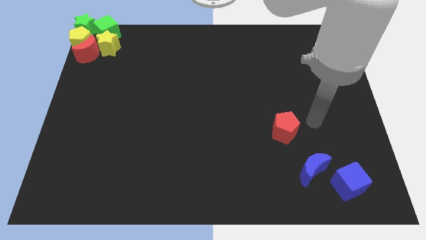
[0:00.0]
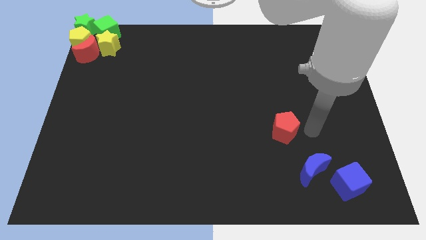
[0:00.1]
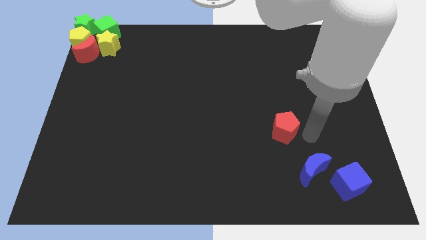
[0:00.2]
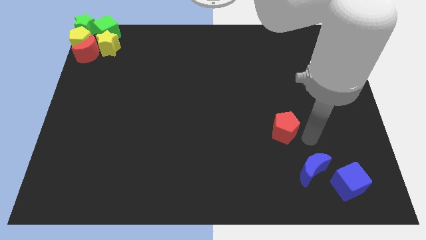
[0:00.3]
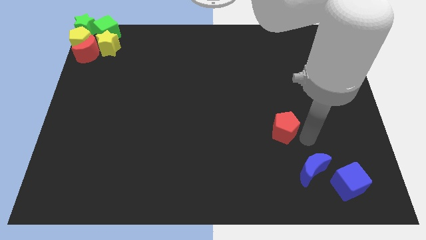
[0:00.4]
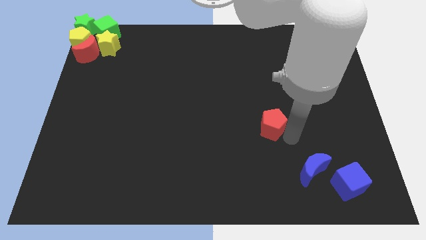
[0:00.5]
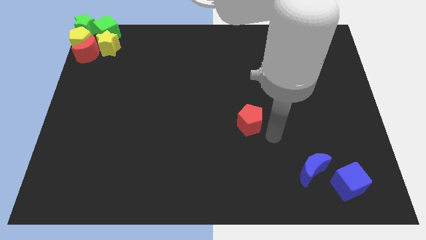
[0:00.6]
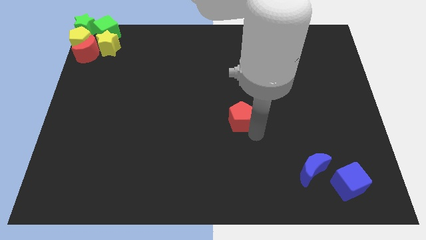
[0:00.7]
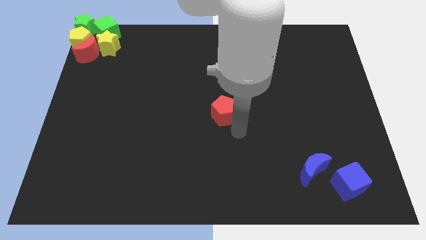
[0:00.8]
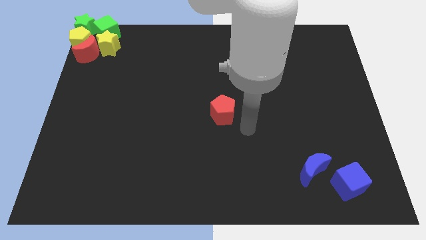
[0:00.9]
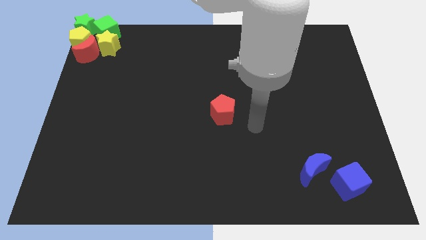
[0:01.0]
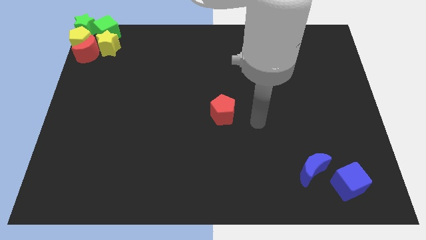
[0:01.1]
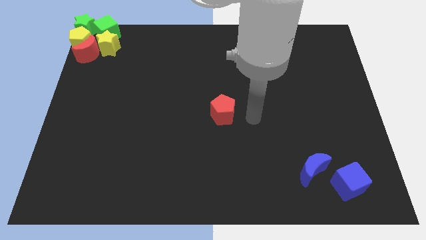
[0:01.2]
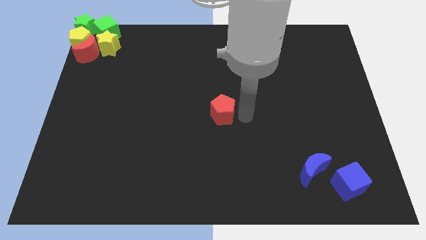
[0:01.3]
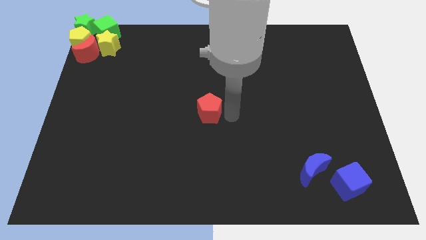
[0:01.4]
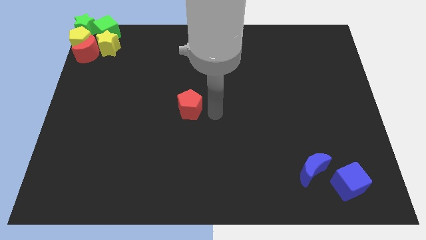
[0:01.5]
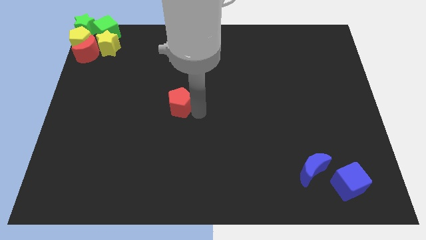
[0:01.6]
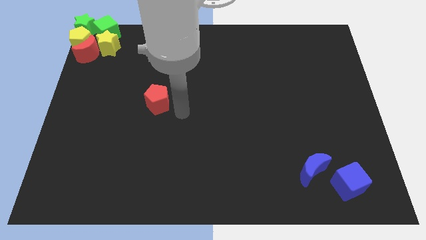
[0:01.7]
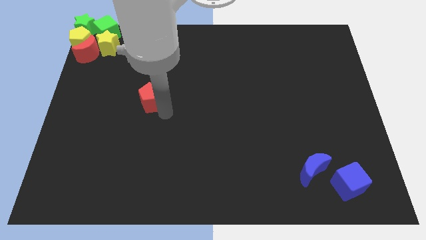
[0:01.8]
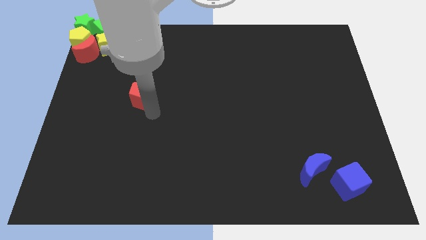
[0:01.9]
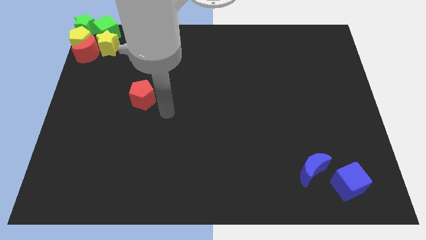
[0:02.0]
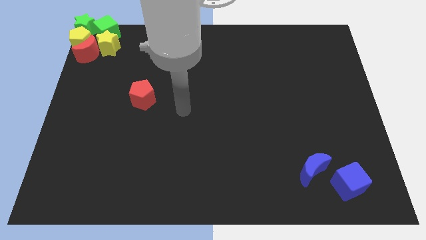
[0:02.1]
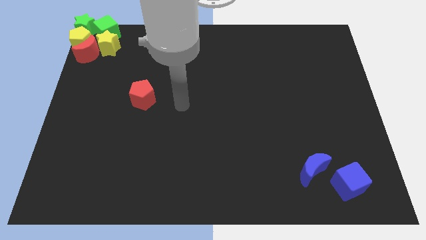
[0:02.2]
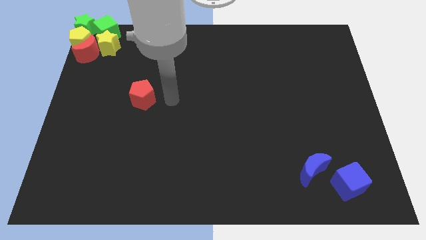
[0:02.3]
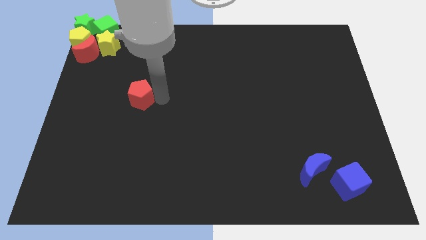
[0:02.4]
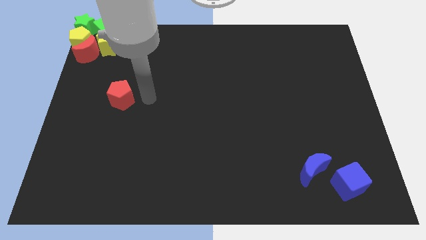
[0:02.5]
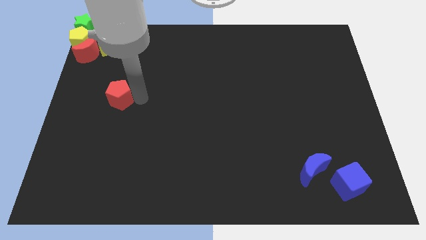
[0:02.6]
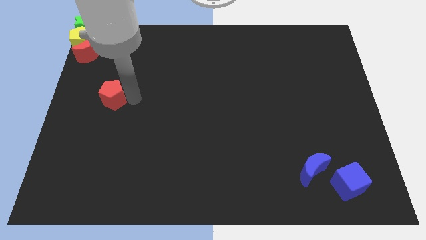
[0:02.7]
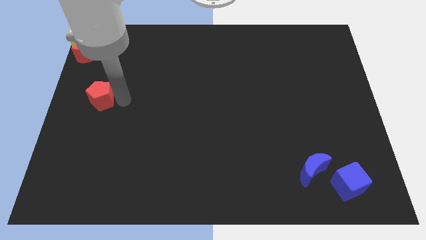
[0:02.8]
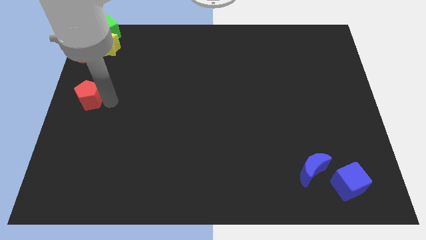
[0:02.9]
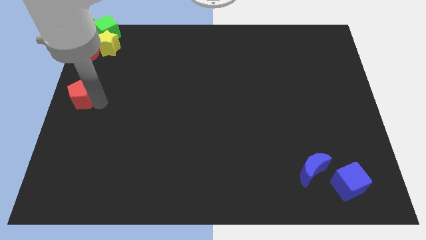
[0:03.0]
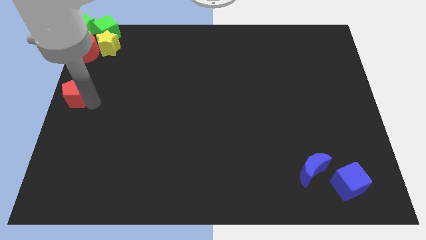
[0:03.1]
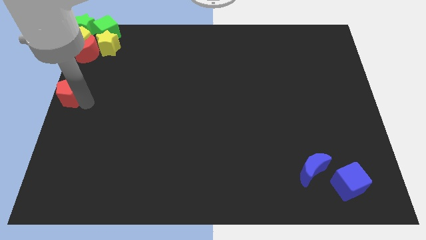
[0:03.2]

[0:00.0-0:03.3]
put the red pentagon vertically below the red moon

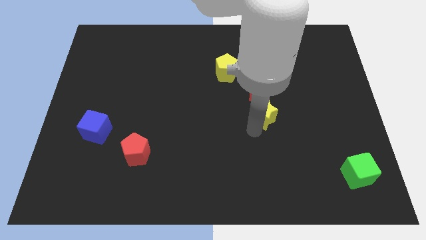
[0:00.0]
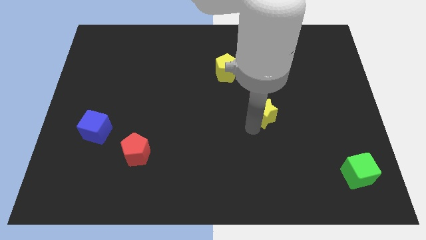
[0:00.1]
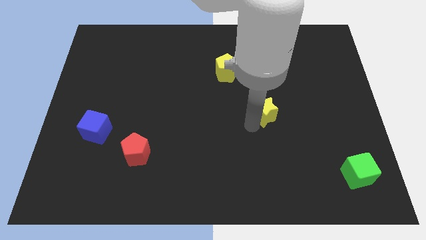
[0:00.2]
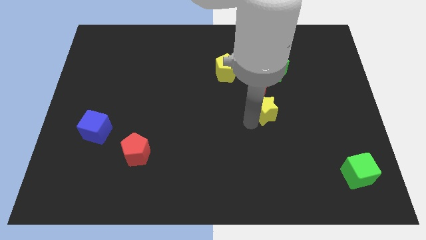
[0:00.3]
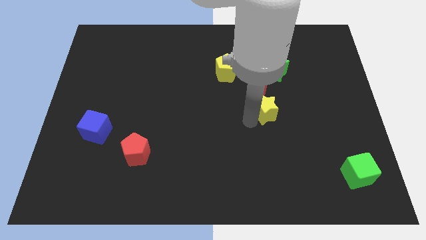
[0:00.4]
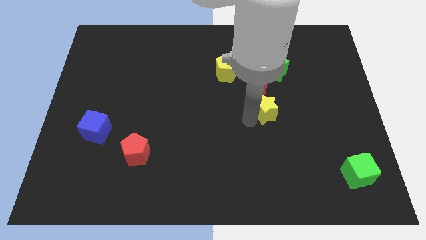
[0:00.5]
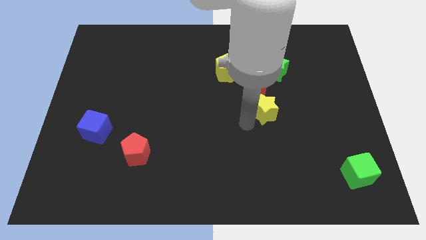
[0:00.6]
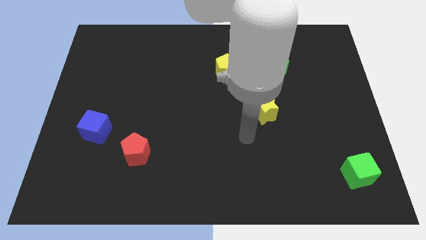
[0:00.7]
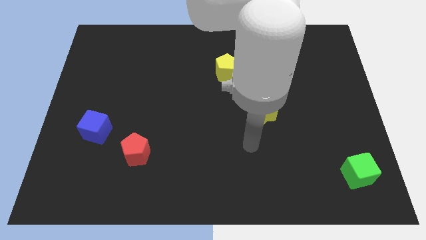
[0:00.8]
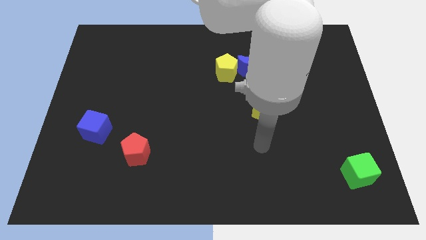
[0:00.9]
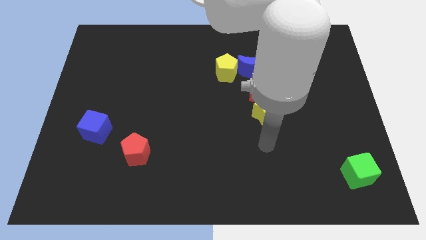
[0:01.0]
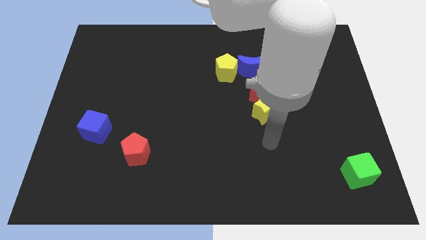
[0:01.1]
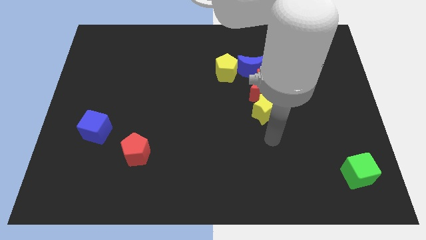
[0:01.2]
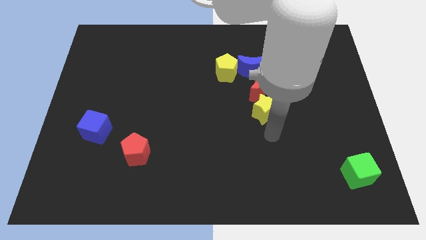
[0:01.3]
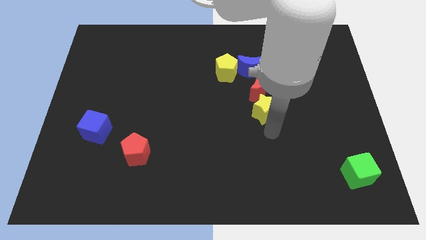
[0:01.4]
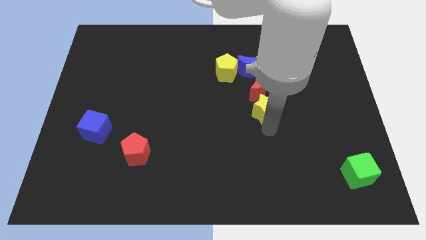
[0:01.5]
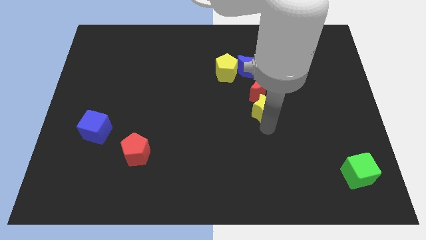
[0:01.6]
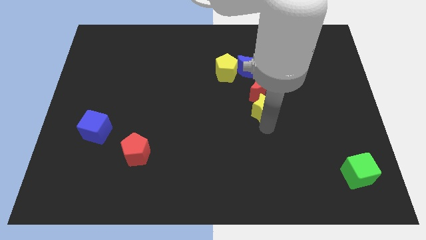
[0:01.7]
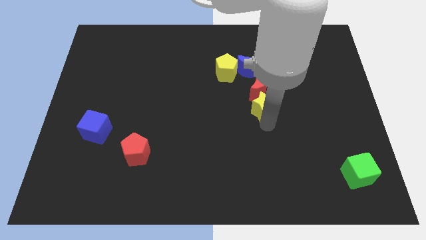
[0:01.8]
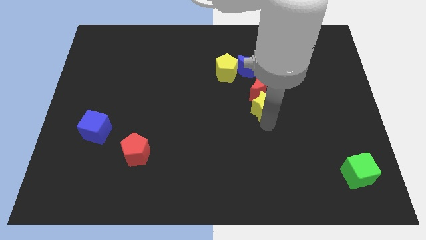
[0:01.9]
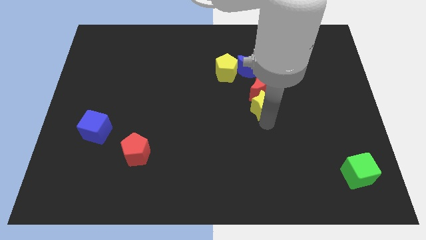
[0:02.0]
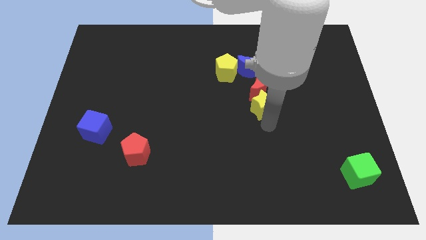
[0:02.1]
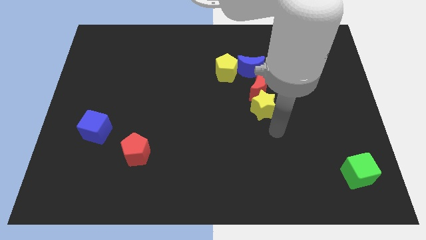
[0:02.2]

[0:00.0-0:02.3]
push the yellow star below into the red crescent

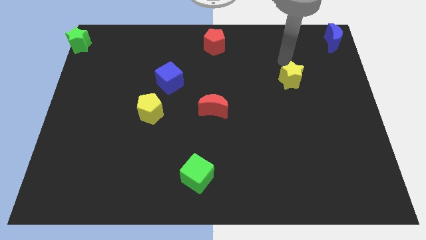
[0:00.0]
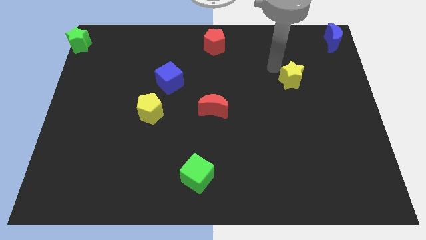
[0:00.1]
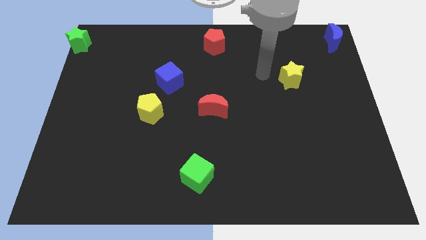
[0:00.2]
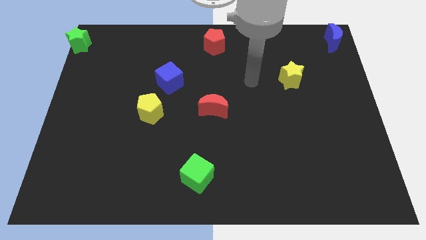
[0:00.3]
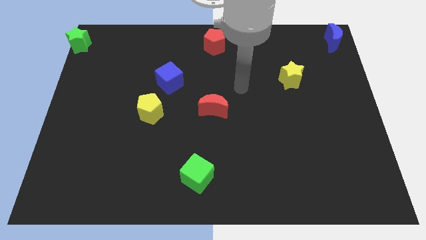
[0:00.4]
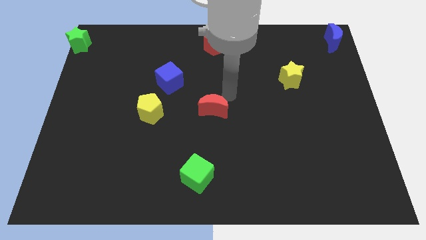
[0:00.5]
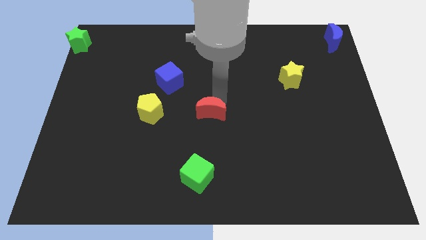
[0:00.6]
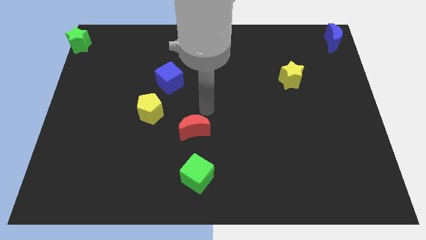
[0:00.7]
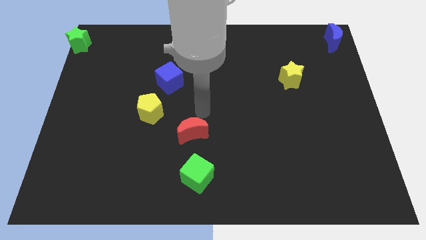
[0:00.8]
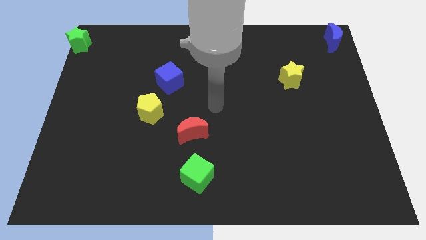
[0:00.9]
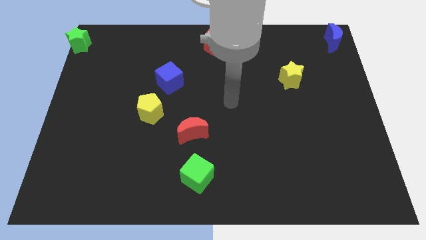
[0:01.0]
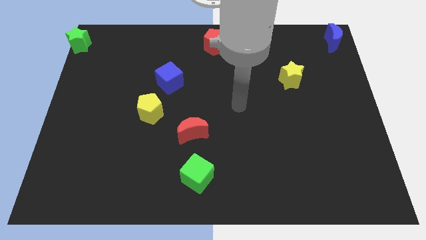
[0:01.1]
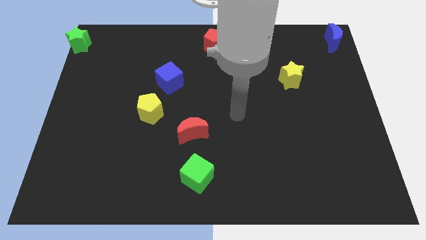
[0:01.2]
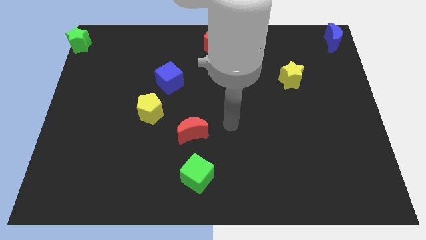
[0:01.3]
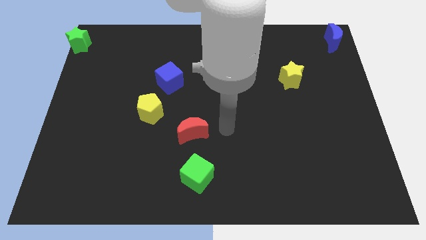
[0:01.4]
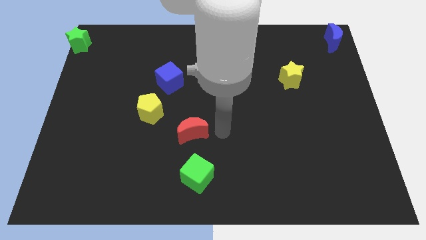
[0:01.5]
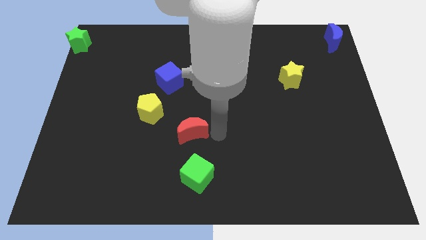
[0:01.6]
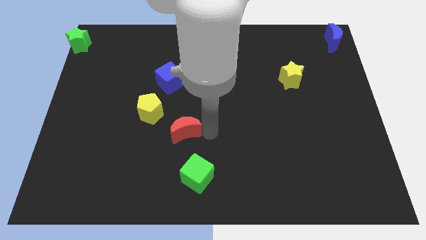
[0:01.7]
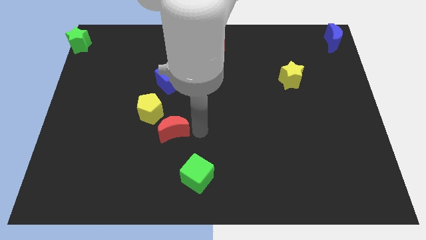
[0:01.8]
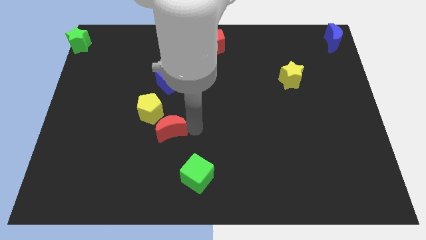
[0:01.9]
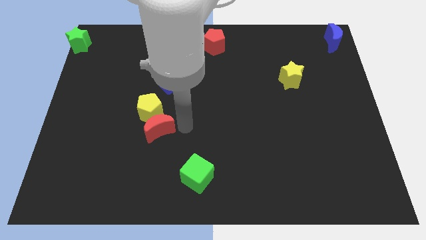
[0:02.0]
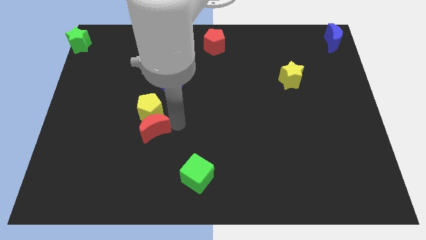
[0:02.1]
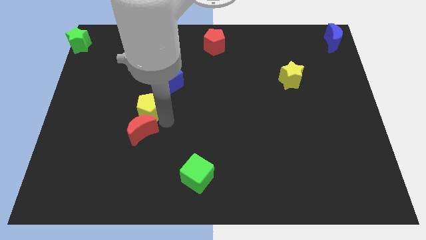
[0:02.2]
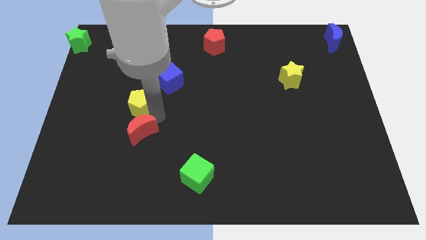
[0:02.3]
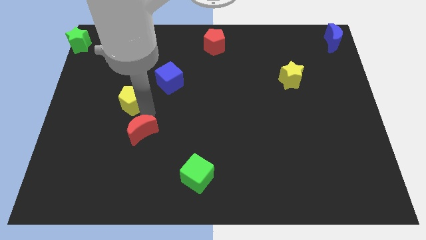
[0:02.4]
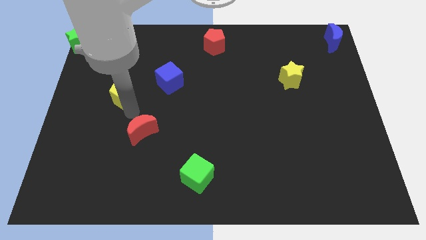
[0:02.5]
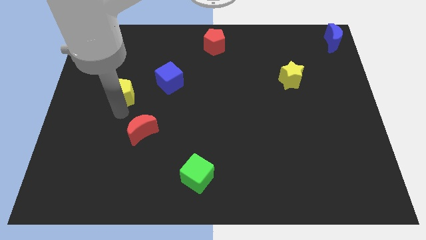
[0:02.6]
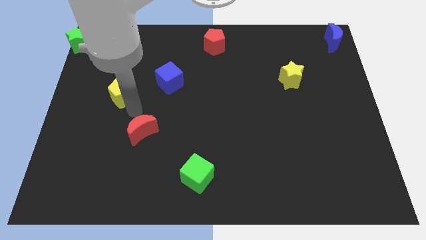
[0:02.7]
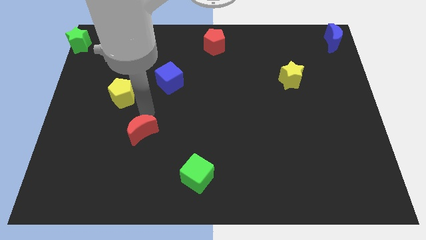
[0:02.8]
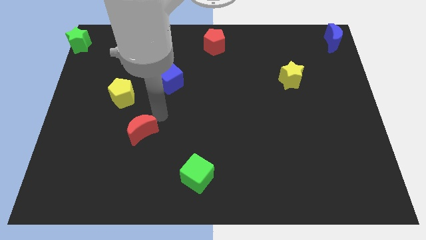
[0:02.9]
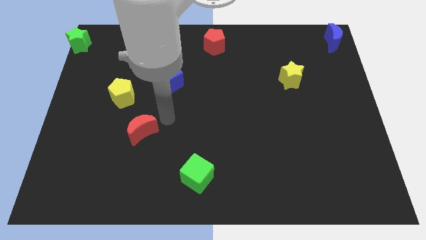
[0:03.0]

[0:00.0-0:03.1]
push the red crescent into the yellow pentagon
